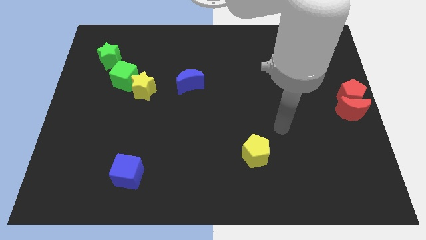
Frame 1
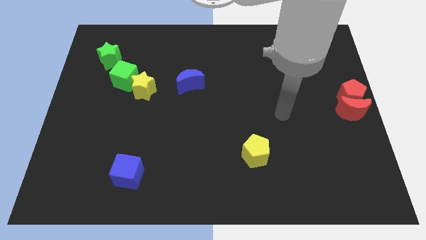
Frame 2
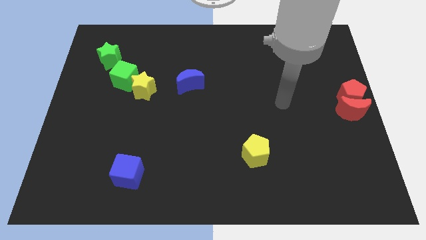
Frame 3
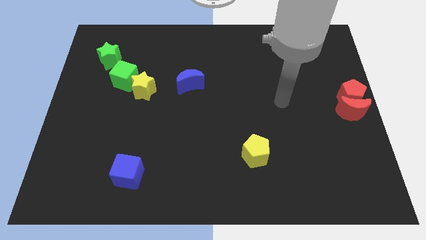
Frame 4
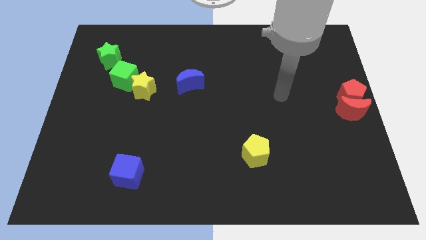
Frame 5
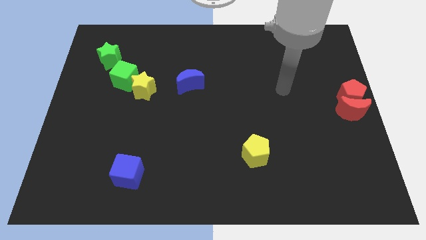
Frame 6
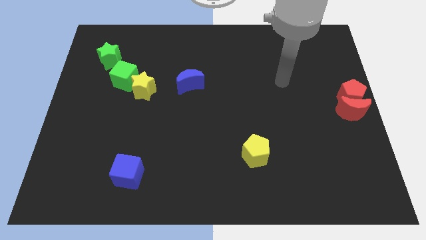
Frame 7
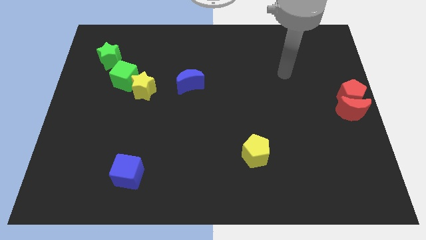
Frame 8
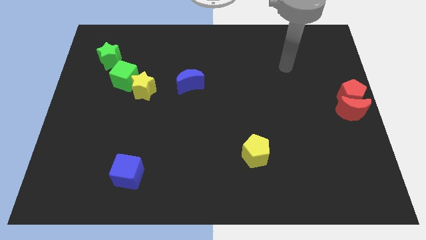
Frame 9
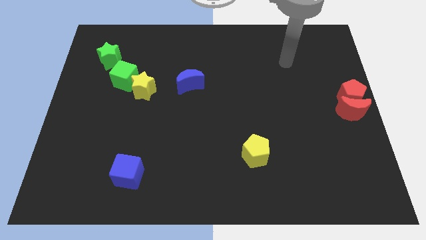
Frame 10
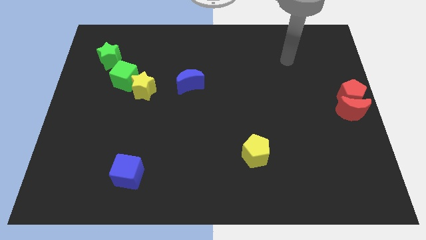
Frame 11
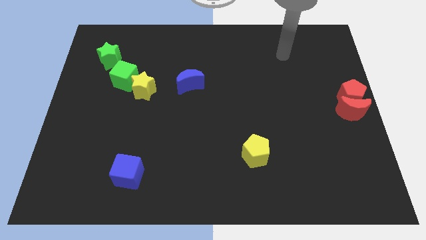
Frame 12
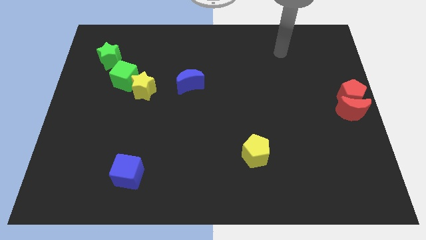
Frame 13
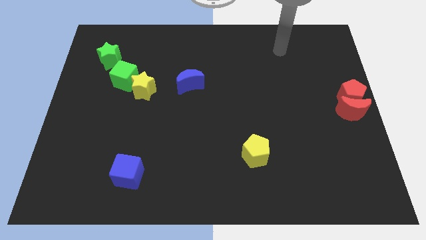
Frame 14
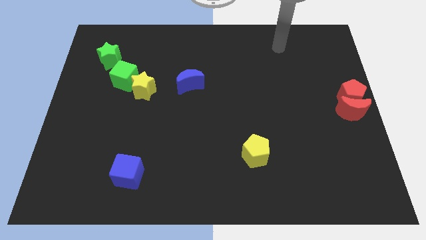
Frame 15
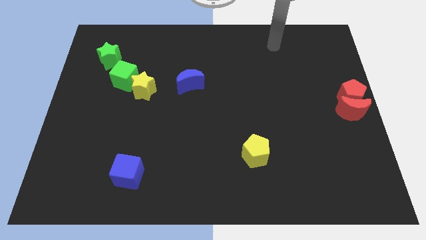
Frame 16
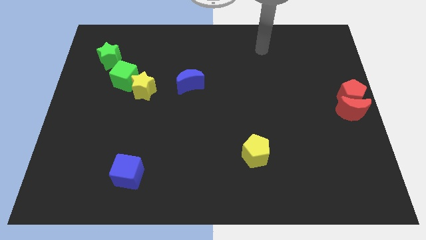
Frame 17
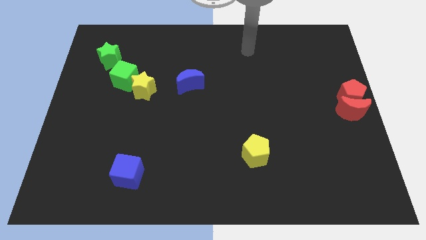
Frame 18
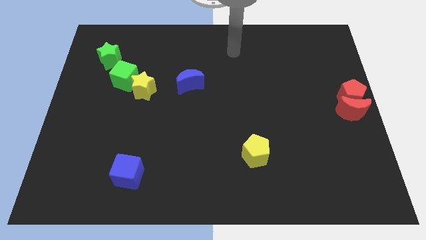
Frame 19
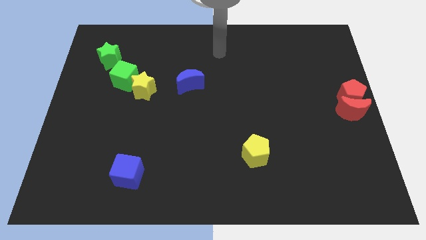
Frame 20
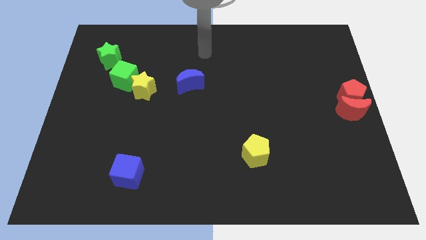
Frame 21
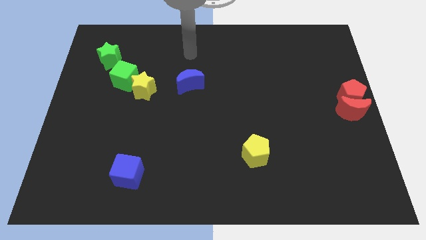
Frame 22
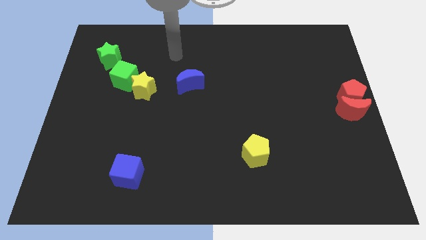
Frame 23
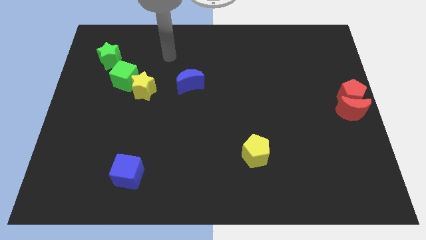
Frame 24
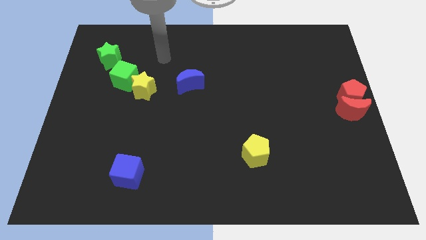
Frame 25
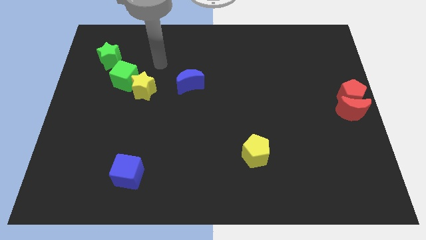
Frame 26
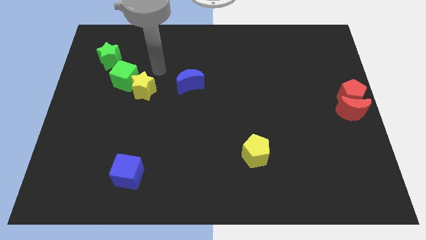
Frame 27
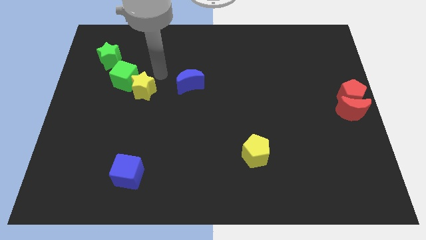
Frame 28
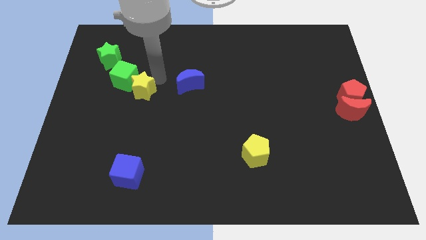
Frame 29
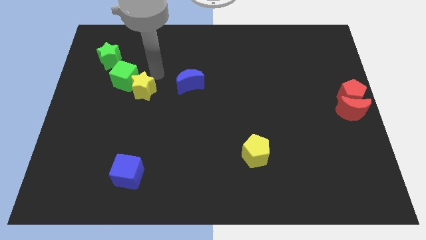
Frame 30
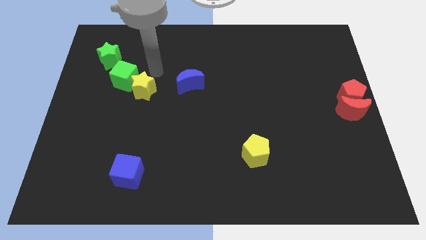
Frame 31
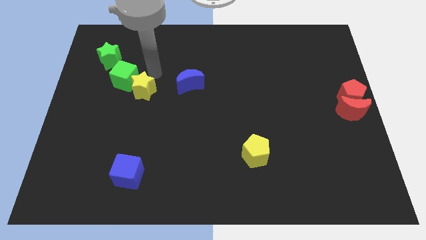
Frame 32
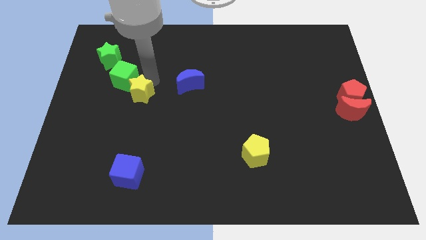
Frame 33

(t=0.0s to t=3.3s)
touch the top right of the yellow star

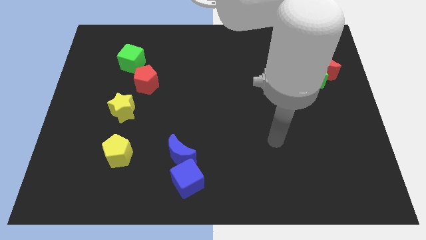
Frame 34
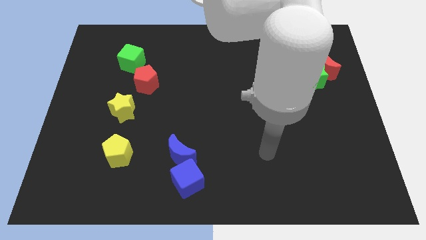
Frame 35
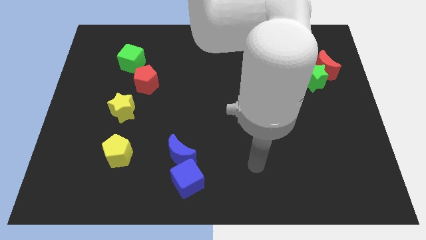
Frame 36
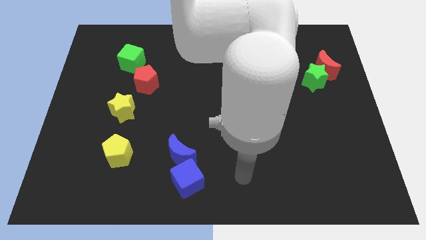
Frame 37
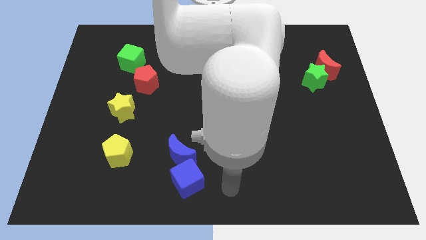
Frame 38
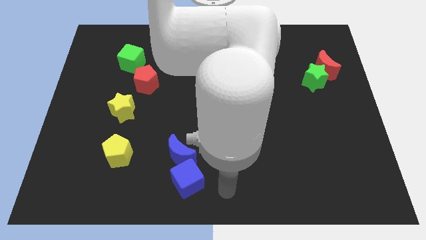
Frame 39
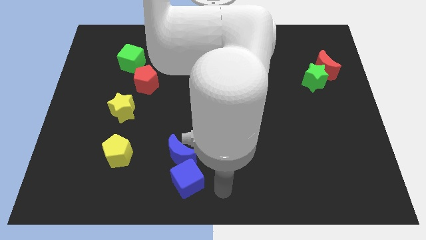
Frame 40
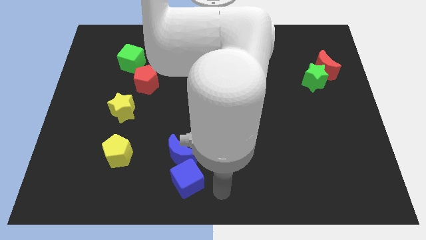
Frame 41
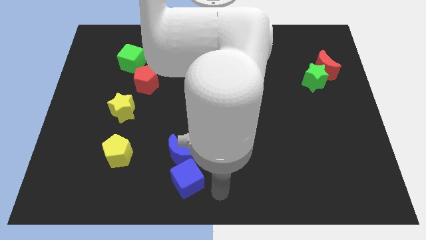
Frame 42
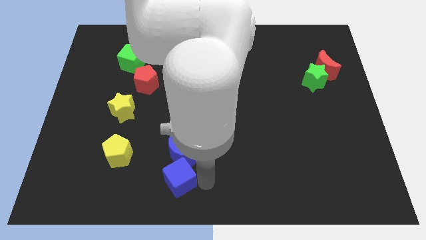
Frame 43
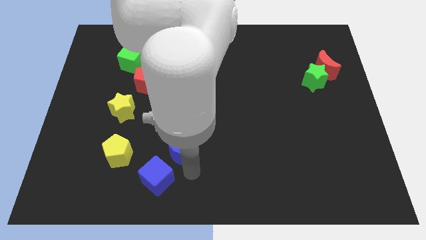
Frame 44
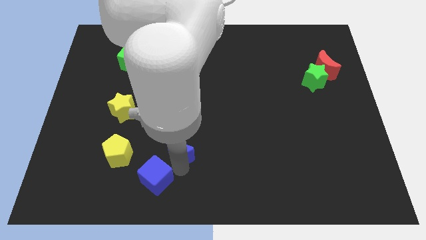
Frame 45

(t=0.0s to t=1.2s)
move blue cube left below the blue moon

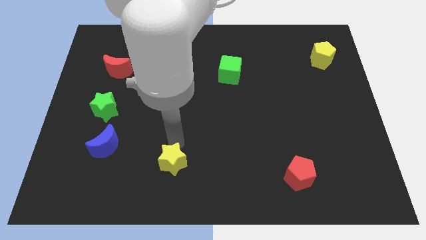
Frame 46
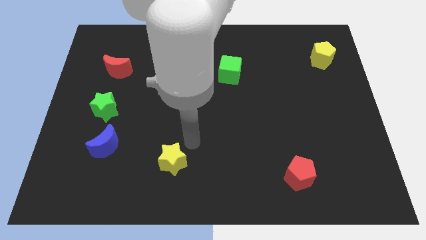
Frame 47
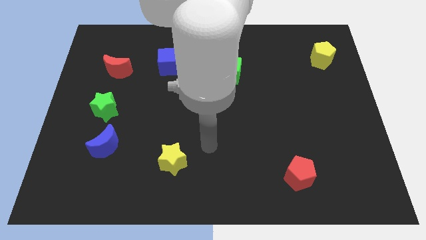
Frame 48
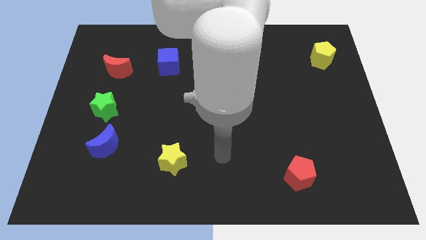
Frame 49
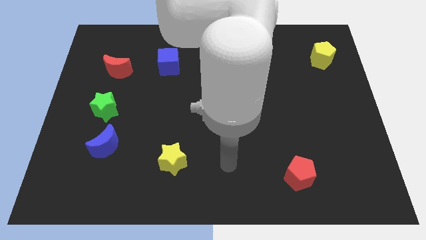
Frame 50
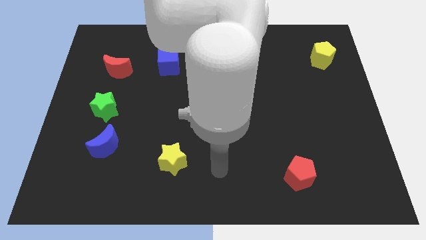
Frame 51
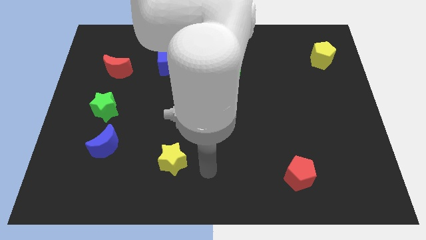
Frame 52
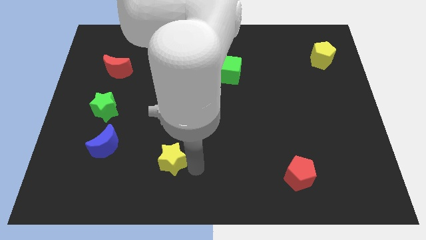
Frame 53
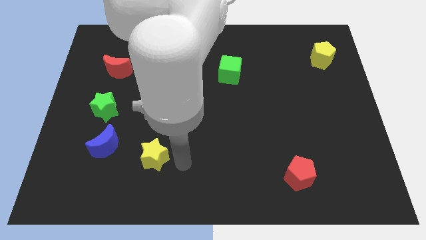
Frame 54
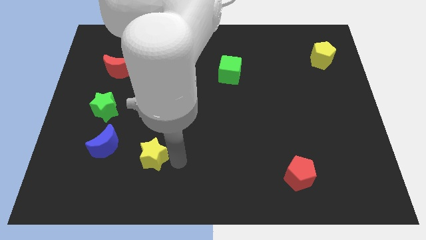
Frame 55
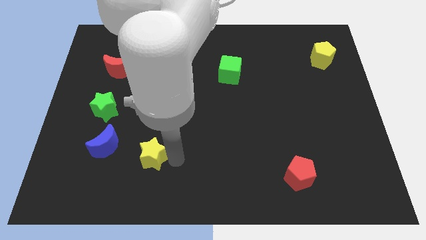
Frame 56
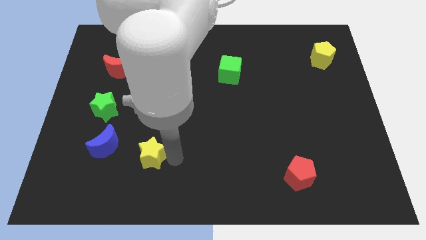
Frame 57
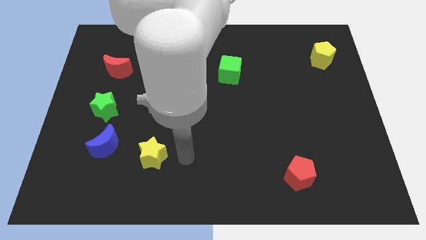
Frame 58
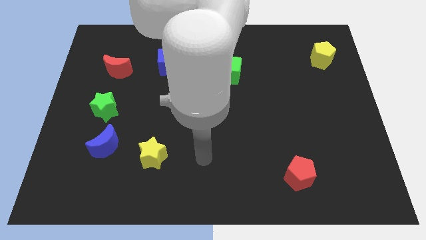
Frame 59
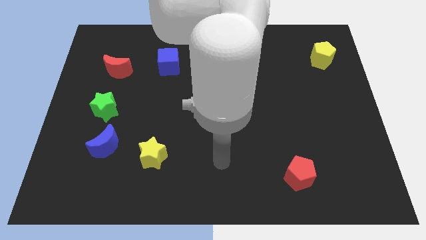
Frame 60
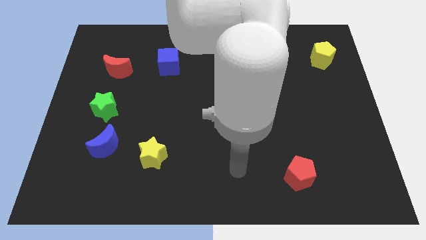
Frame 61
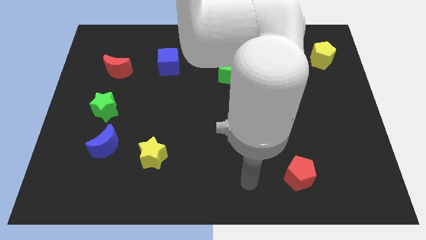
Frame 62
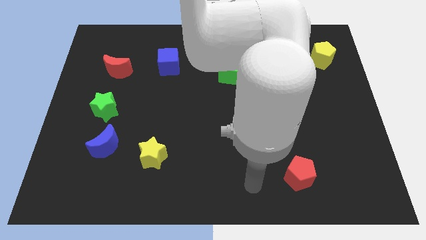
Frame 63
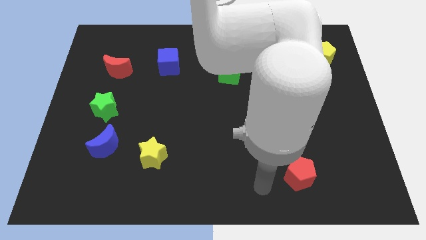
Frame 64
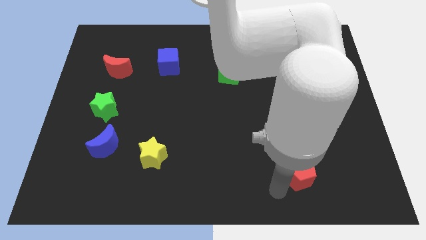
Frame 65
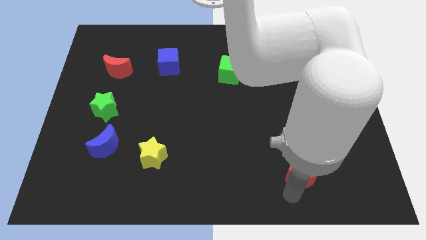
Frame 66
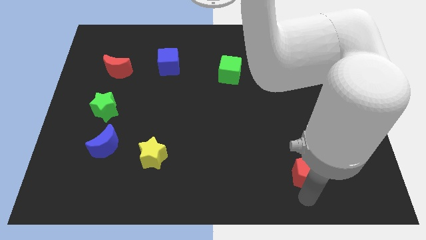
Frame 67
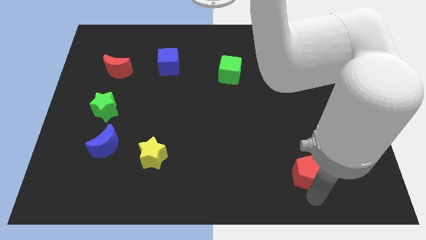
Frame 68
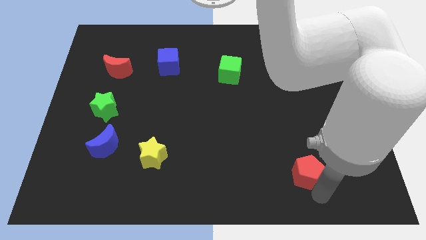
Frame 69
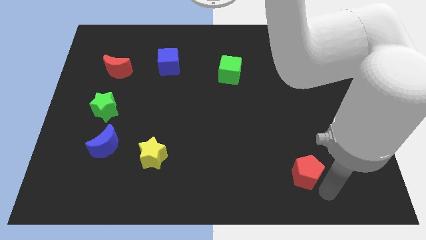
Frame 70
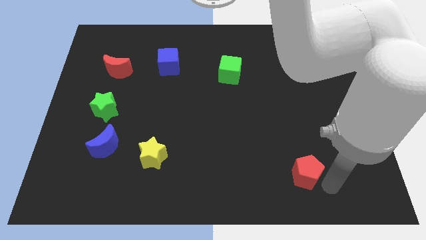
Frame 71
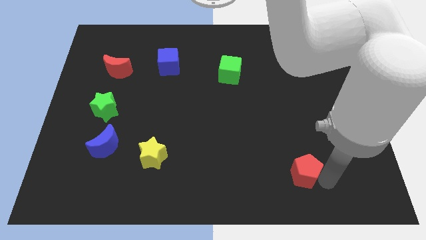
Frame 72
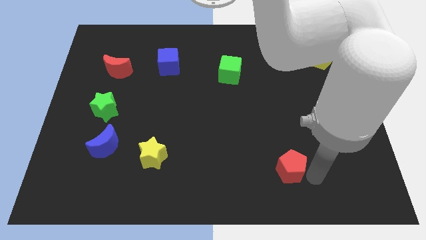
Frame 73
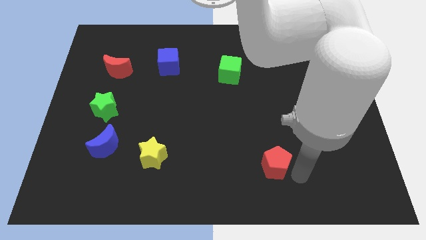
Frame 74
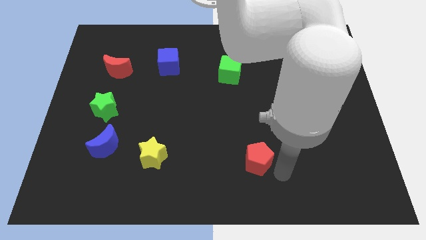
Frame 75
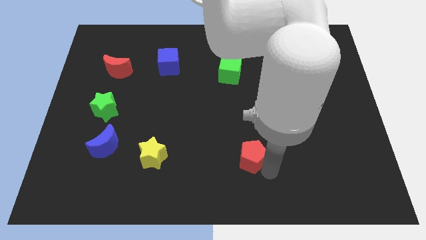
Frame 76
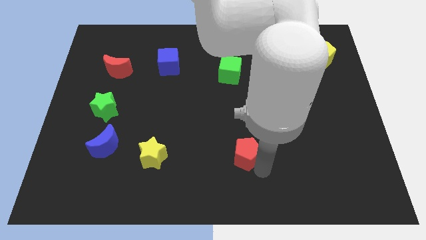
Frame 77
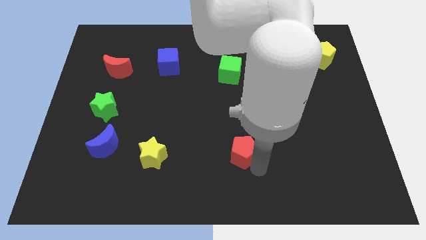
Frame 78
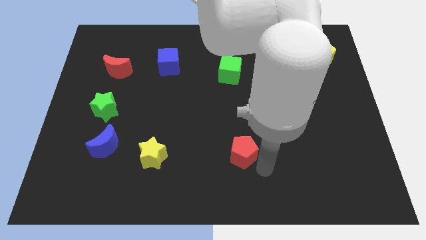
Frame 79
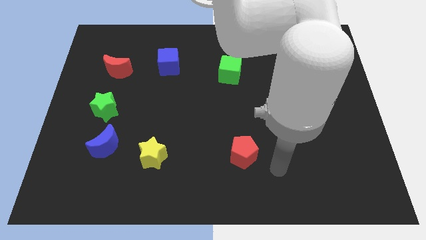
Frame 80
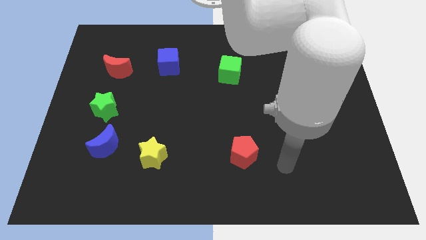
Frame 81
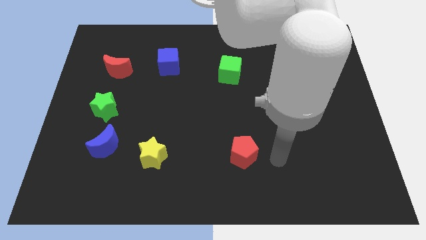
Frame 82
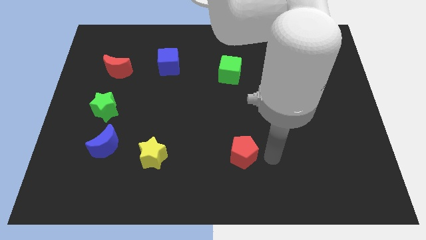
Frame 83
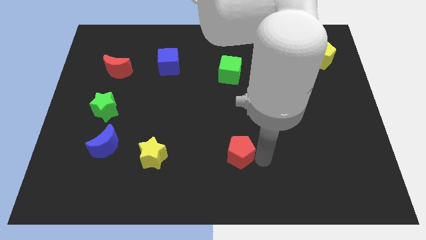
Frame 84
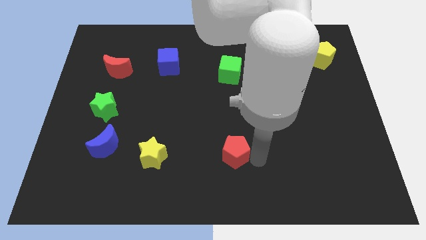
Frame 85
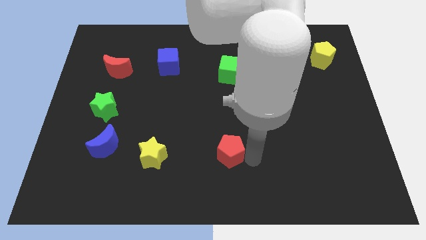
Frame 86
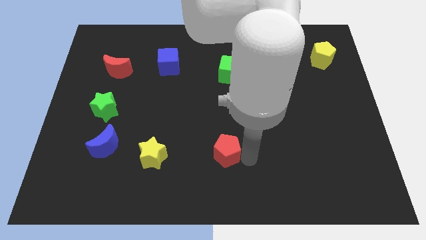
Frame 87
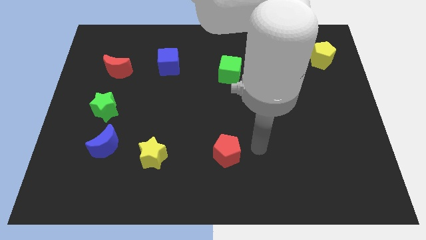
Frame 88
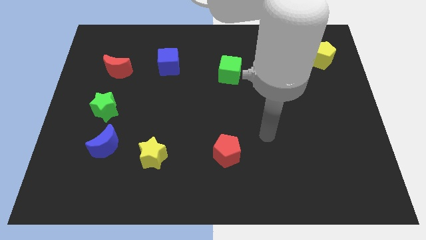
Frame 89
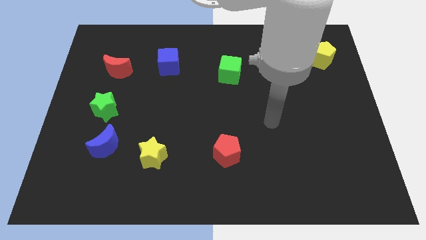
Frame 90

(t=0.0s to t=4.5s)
place the yellow star and red pentagon parallel to each other
